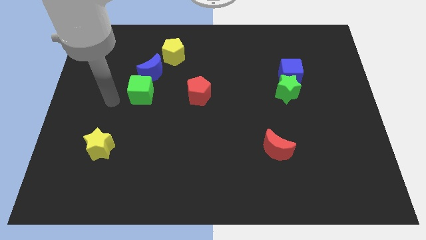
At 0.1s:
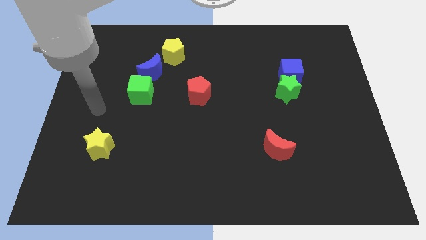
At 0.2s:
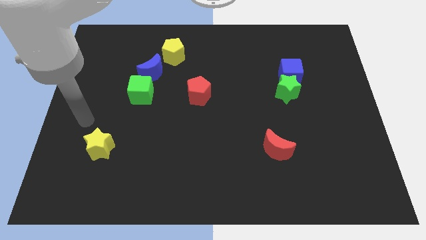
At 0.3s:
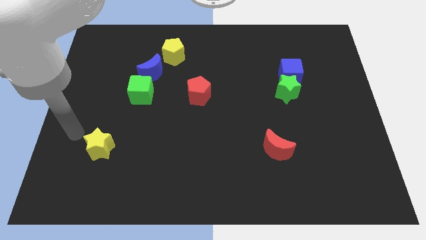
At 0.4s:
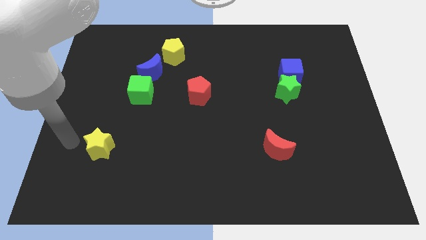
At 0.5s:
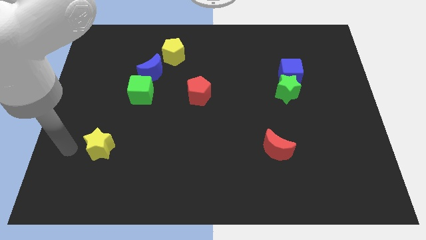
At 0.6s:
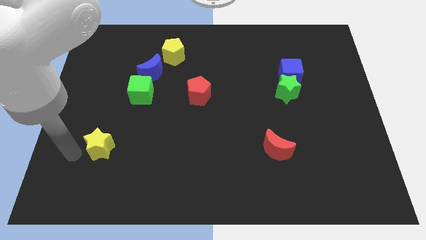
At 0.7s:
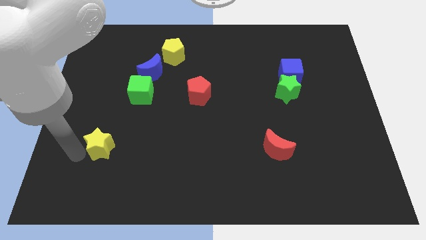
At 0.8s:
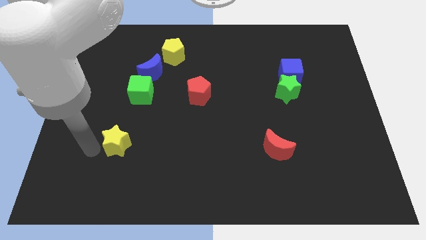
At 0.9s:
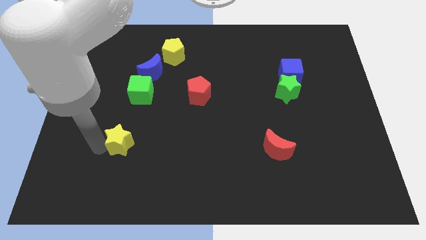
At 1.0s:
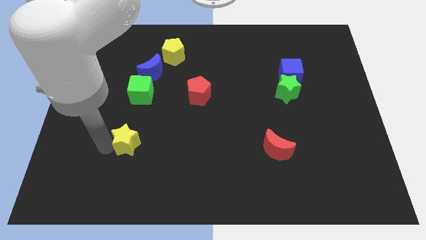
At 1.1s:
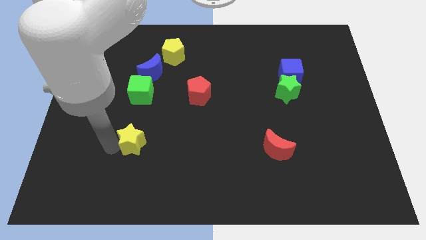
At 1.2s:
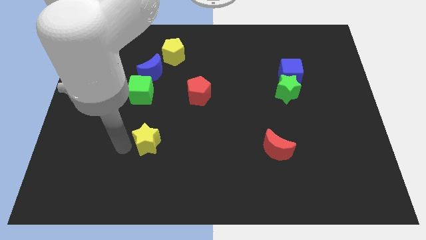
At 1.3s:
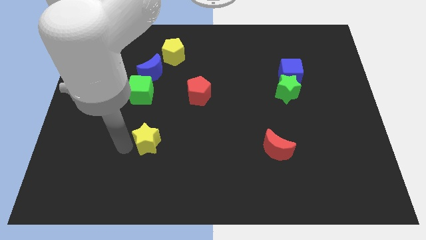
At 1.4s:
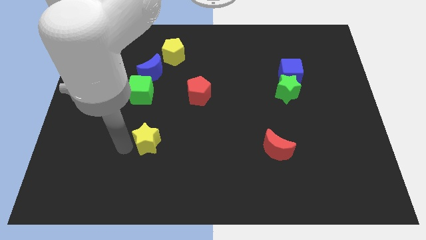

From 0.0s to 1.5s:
move the yellow star down to the green cube

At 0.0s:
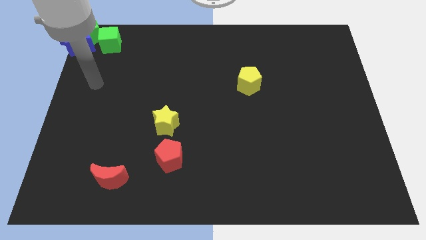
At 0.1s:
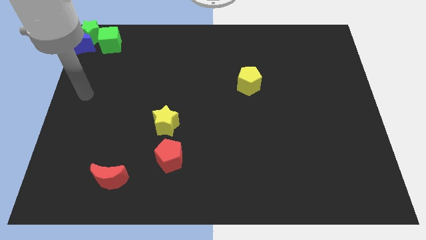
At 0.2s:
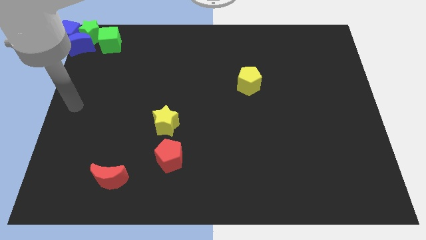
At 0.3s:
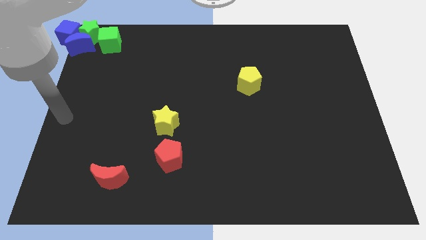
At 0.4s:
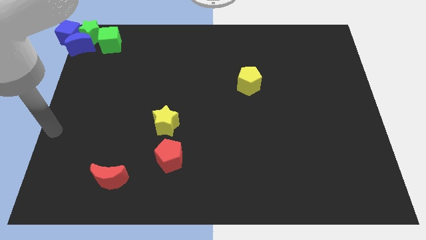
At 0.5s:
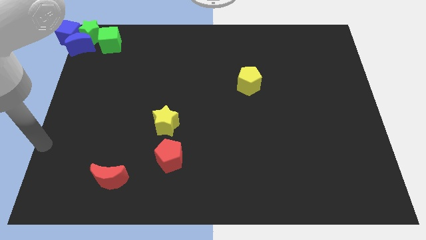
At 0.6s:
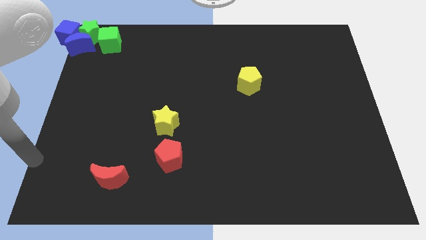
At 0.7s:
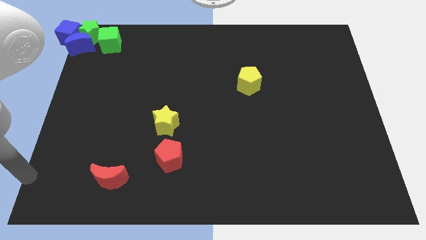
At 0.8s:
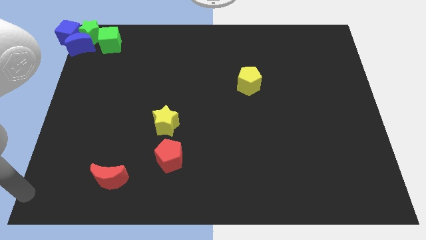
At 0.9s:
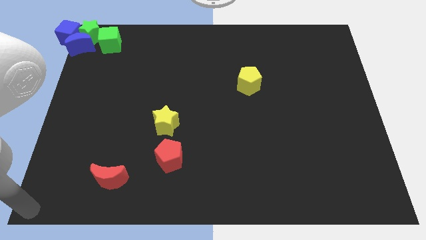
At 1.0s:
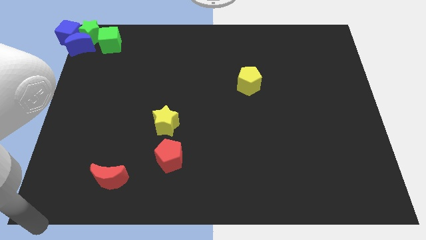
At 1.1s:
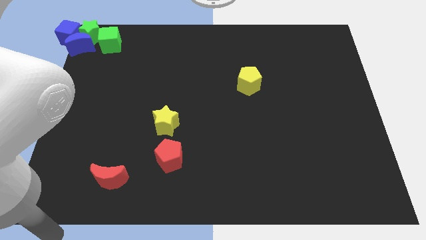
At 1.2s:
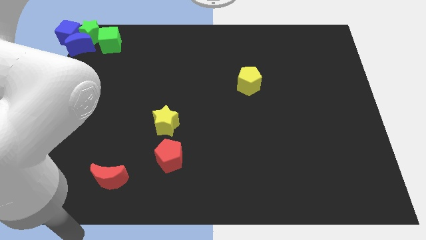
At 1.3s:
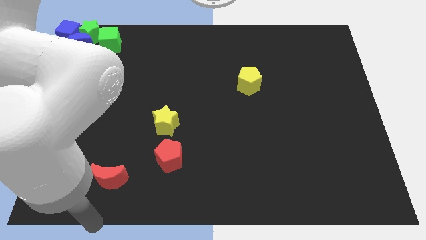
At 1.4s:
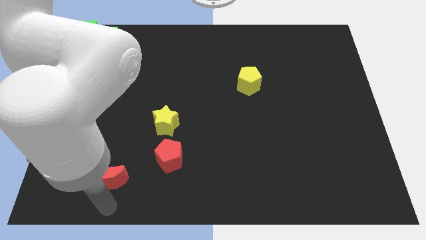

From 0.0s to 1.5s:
place your arm at the bottom of the red crescent

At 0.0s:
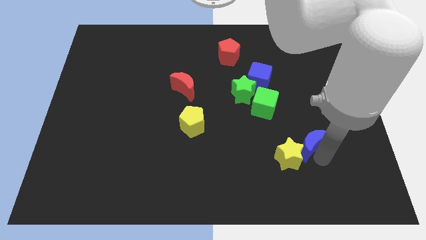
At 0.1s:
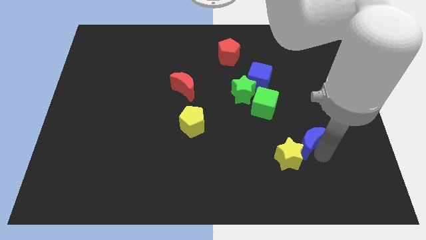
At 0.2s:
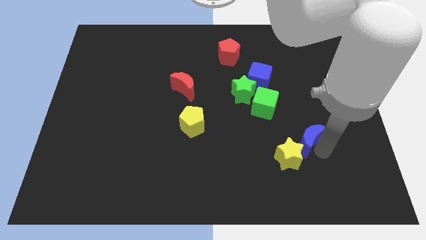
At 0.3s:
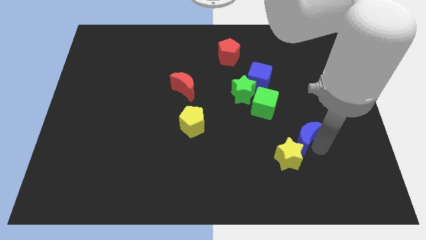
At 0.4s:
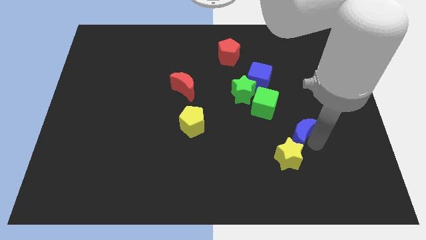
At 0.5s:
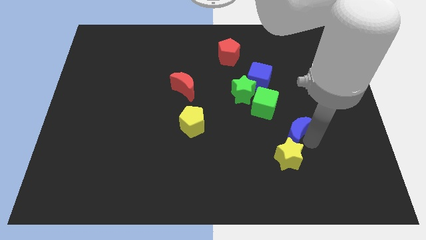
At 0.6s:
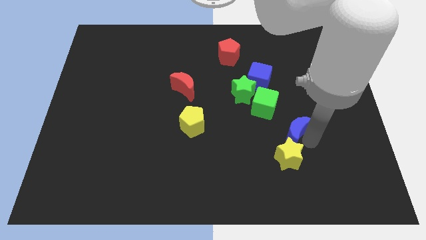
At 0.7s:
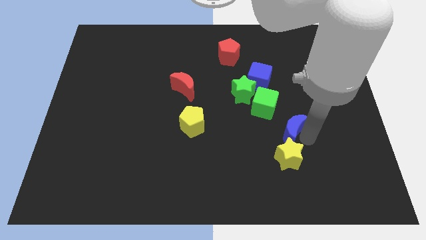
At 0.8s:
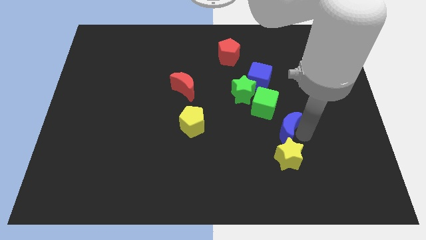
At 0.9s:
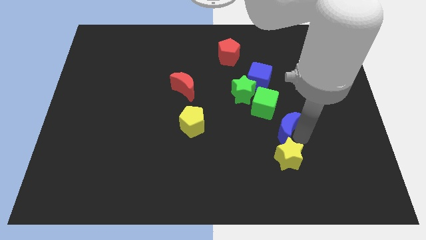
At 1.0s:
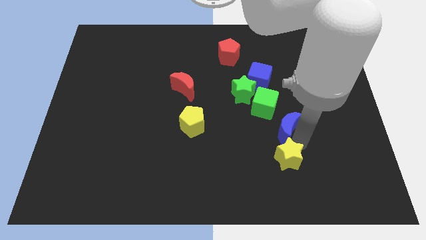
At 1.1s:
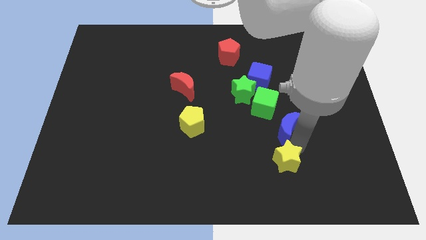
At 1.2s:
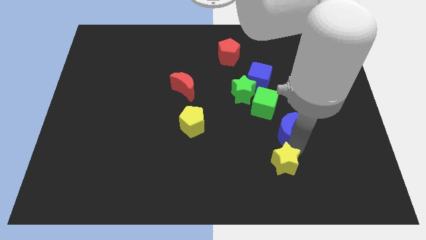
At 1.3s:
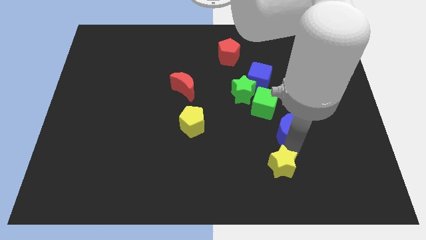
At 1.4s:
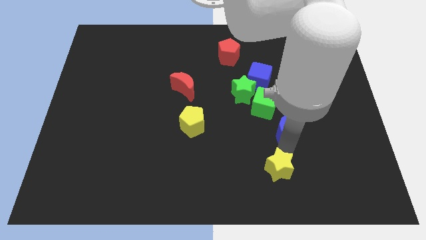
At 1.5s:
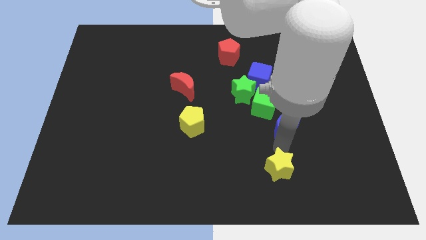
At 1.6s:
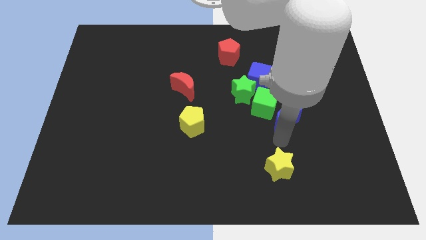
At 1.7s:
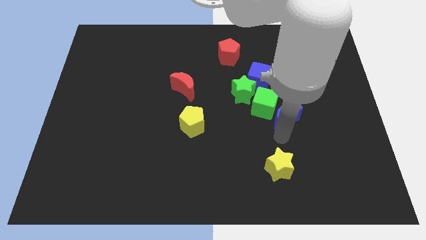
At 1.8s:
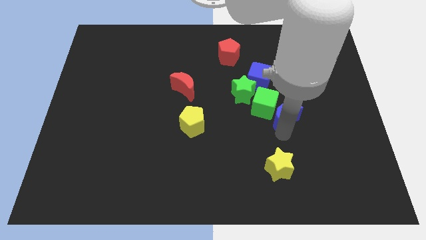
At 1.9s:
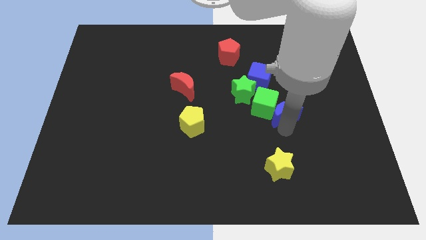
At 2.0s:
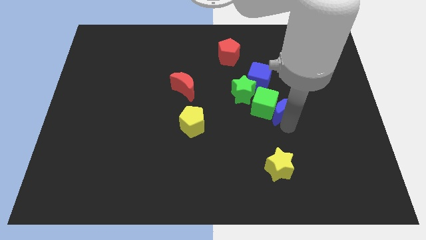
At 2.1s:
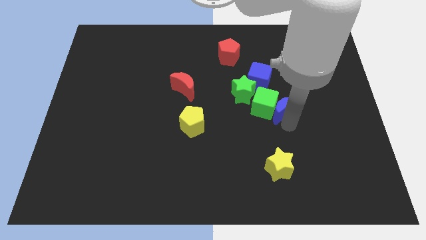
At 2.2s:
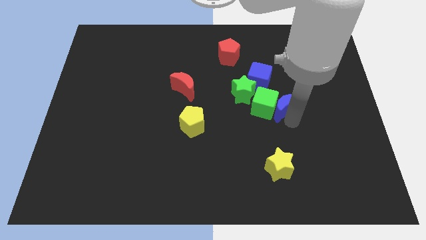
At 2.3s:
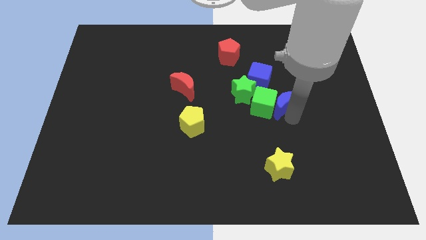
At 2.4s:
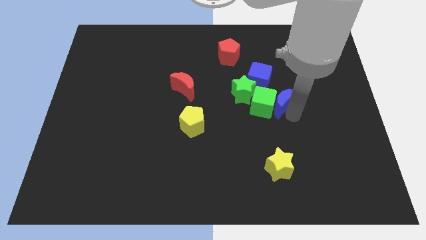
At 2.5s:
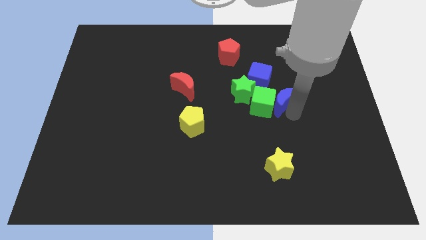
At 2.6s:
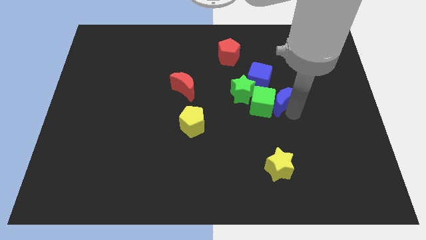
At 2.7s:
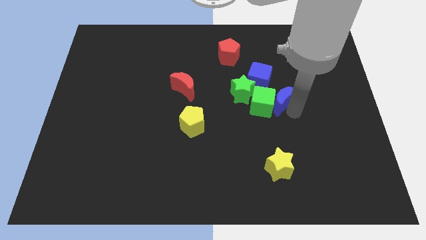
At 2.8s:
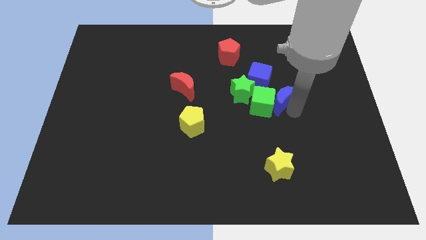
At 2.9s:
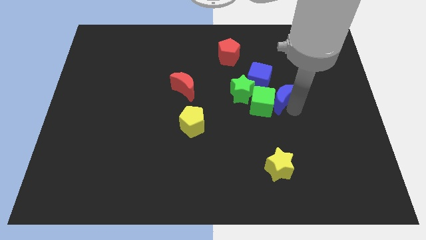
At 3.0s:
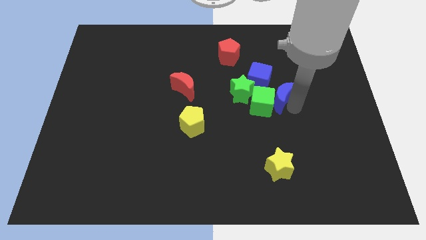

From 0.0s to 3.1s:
move the blue crescent to the right side of the green cube

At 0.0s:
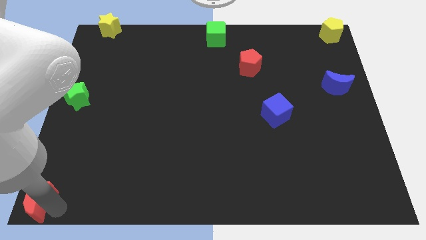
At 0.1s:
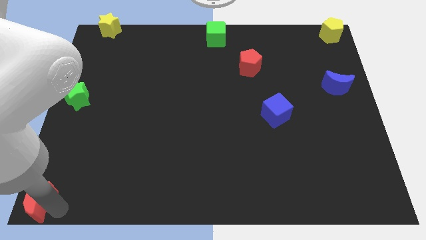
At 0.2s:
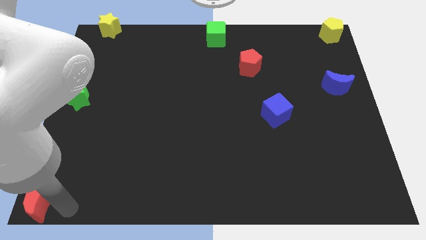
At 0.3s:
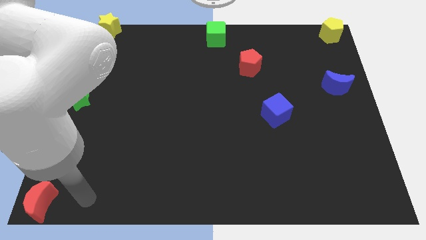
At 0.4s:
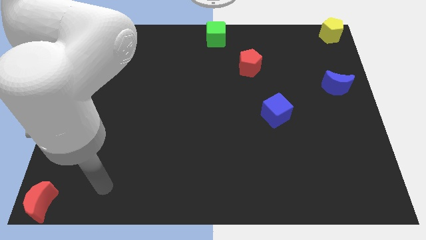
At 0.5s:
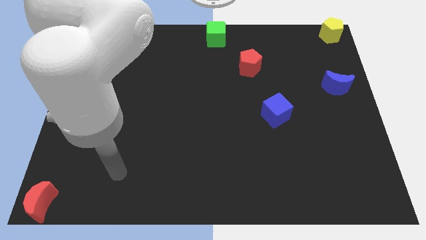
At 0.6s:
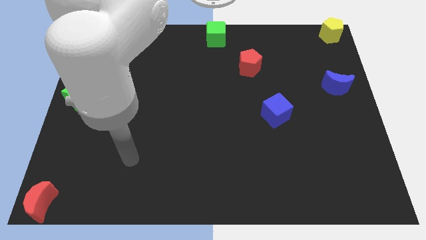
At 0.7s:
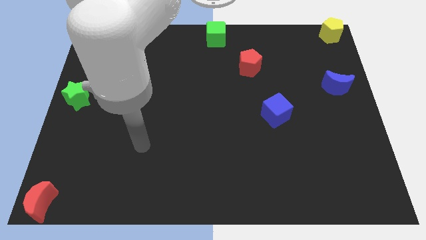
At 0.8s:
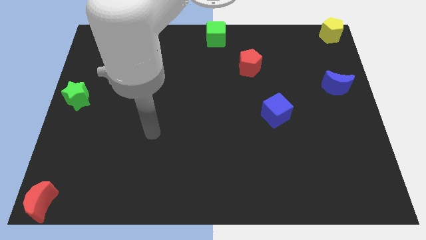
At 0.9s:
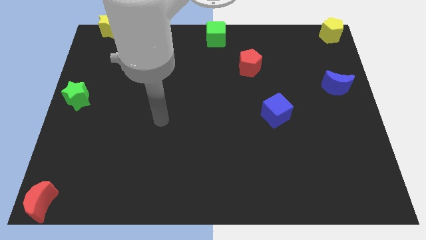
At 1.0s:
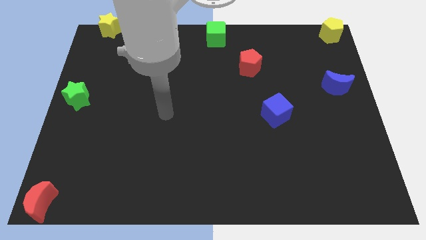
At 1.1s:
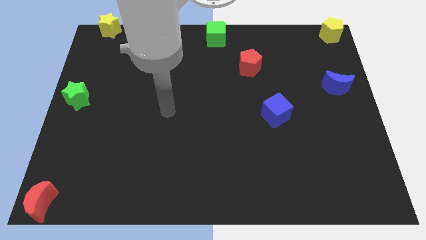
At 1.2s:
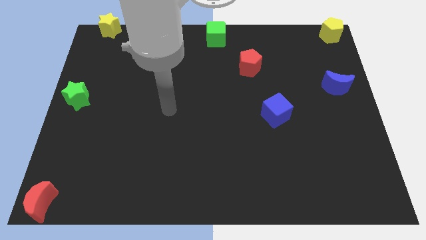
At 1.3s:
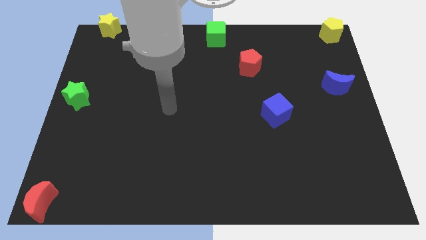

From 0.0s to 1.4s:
move the arm away from the red moon

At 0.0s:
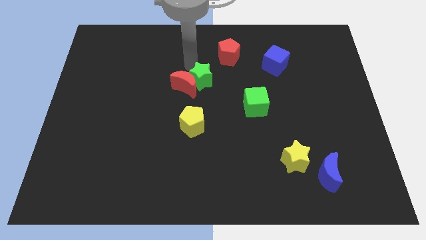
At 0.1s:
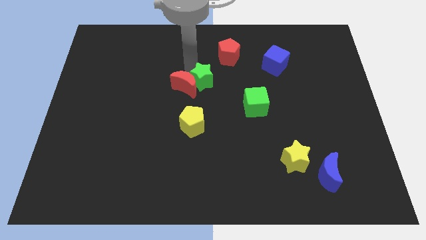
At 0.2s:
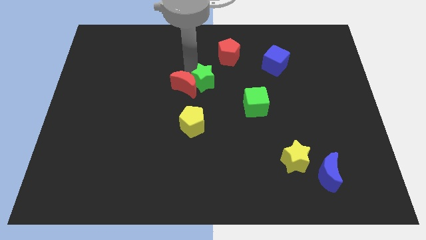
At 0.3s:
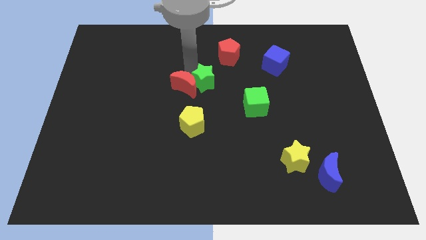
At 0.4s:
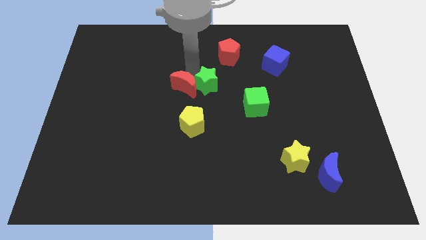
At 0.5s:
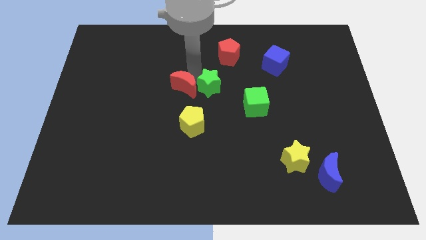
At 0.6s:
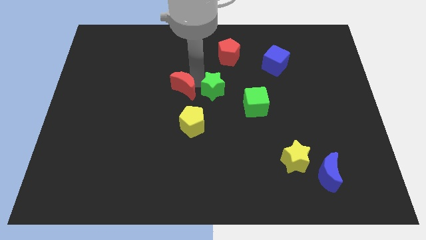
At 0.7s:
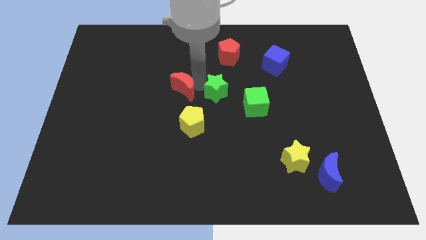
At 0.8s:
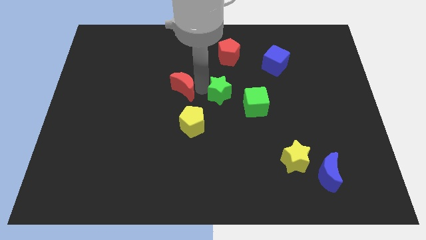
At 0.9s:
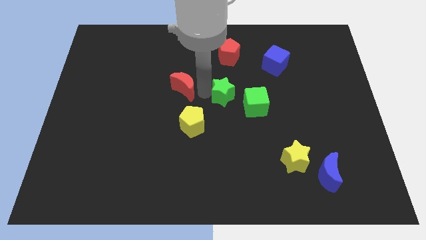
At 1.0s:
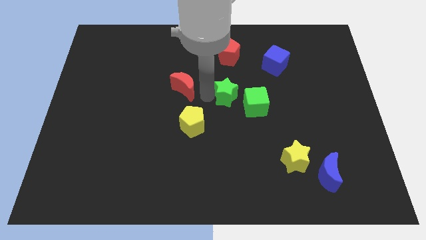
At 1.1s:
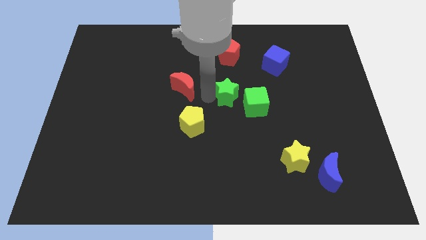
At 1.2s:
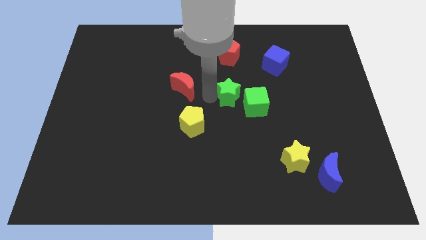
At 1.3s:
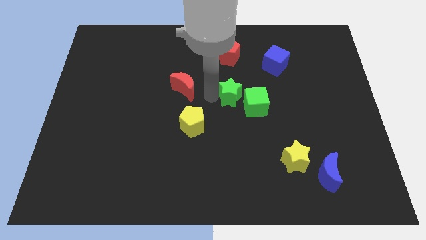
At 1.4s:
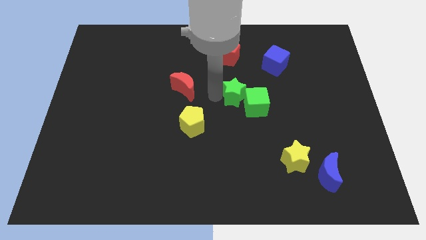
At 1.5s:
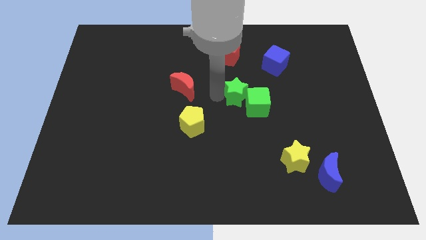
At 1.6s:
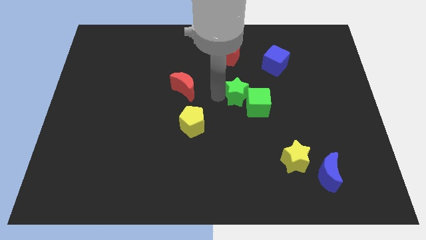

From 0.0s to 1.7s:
push the green star into the green cube
